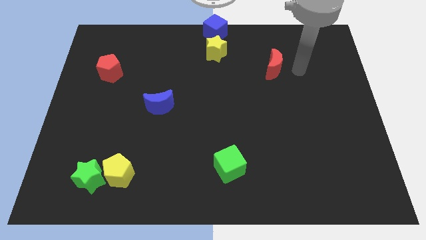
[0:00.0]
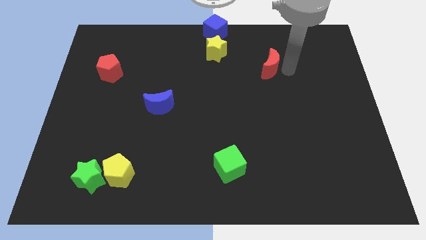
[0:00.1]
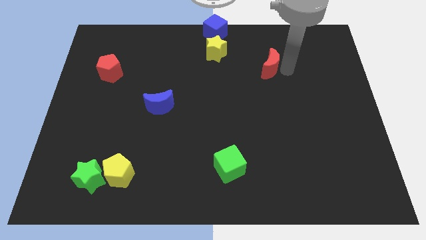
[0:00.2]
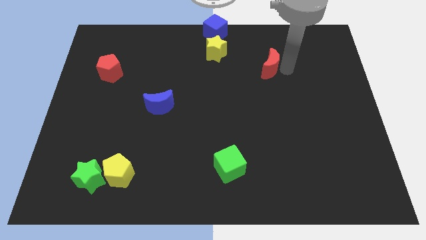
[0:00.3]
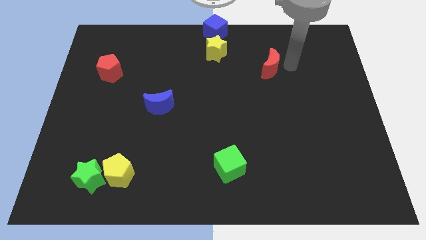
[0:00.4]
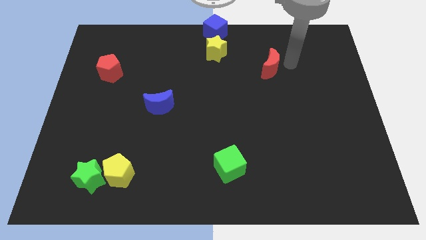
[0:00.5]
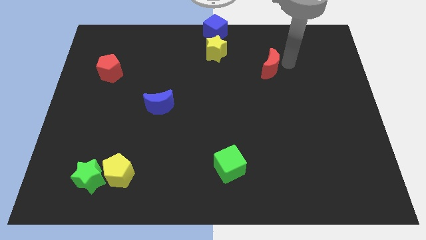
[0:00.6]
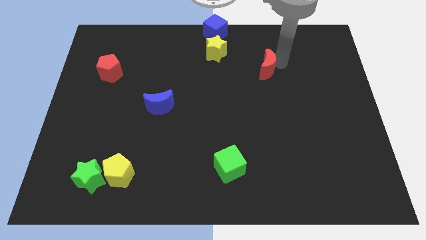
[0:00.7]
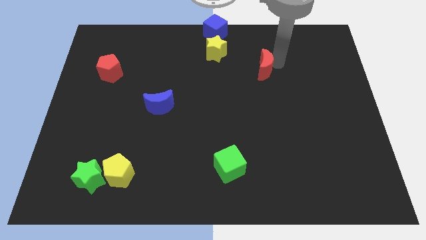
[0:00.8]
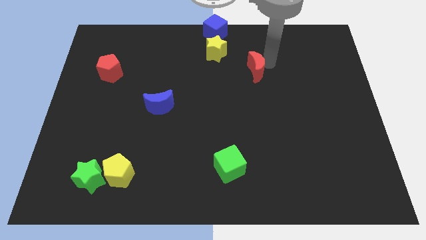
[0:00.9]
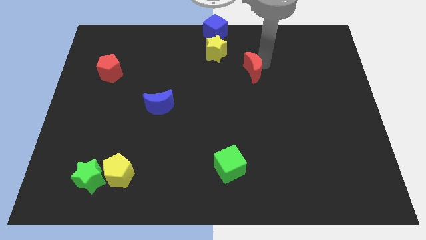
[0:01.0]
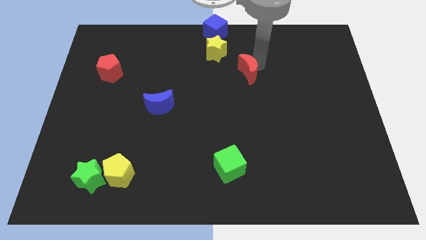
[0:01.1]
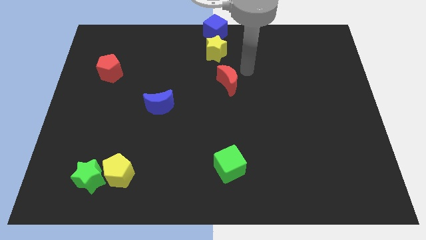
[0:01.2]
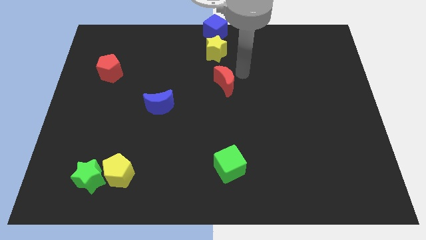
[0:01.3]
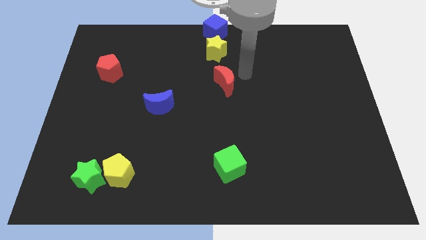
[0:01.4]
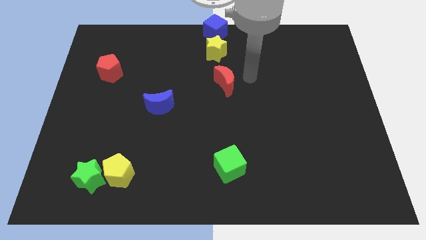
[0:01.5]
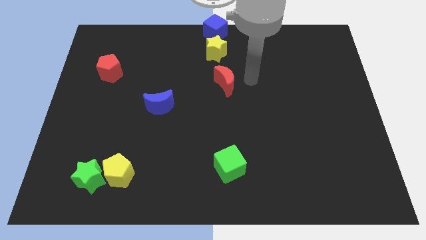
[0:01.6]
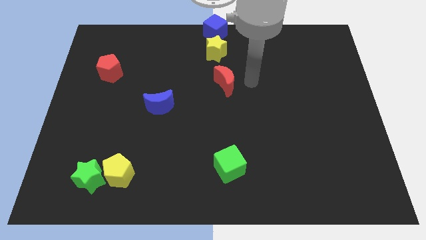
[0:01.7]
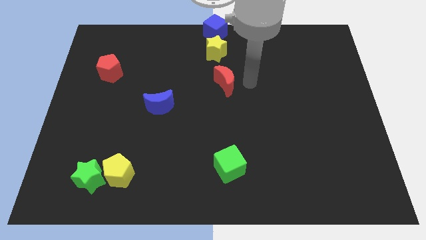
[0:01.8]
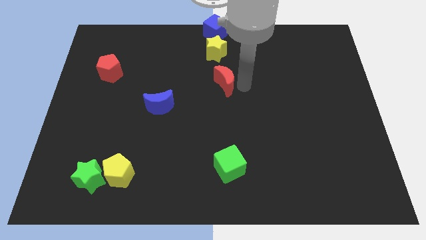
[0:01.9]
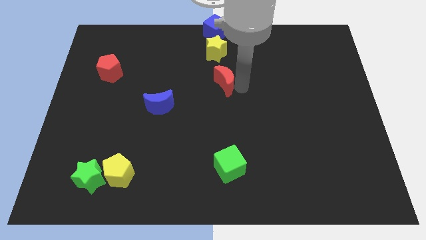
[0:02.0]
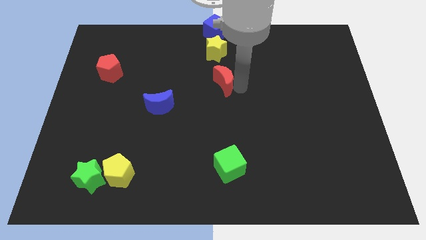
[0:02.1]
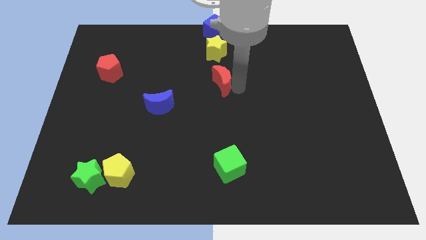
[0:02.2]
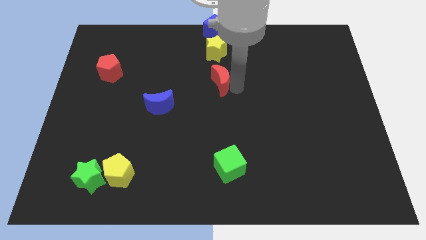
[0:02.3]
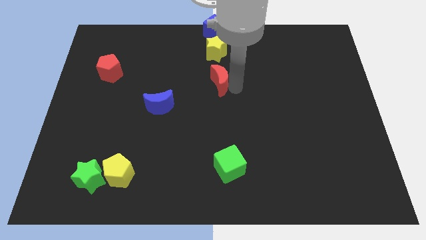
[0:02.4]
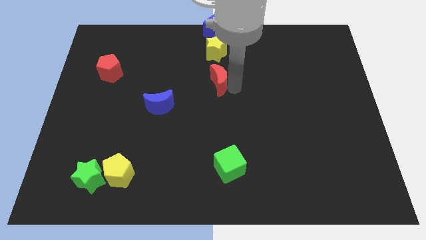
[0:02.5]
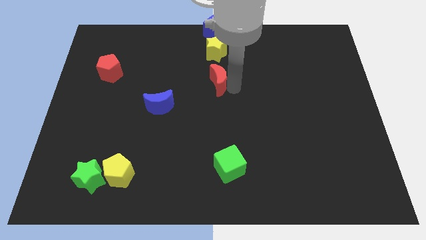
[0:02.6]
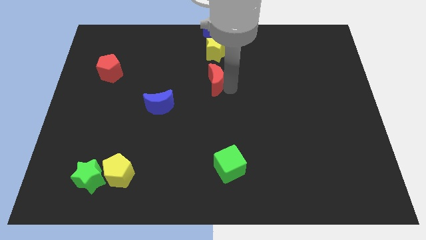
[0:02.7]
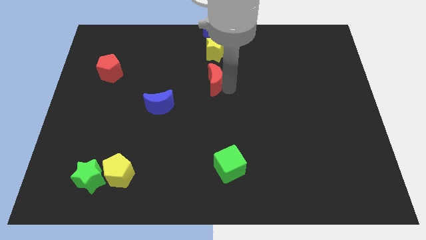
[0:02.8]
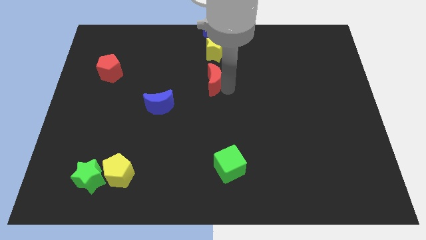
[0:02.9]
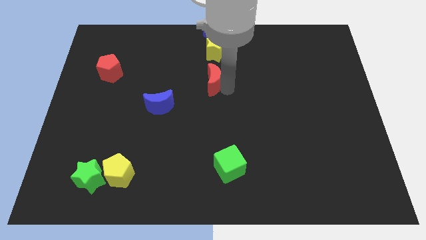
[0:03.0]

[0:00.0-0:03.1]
move the red crescent to the bottom of the yellow star

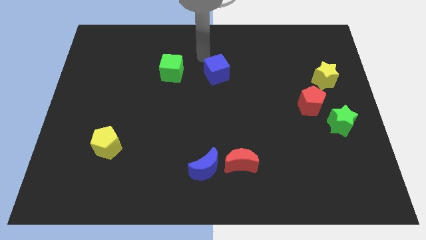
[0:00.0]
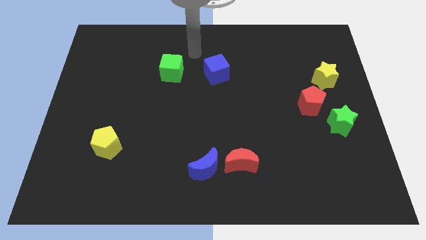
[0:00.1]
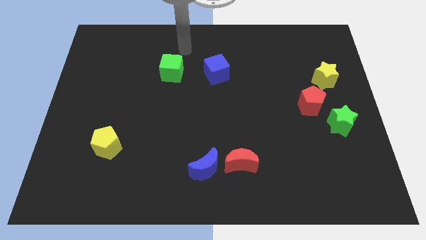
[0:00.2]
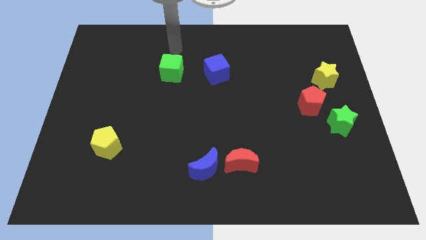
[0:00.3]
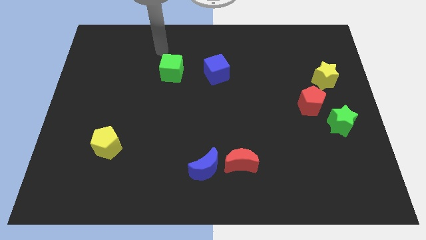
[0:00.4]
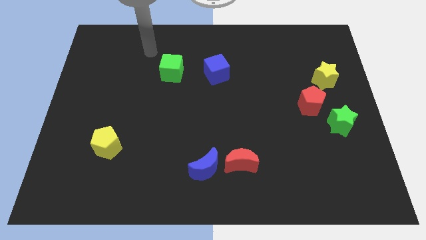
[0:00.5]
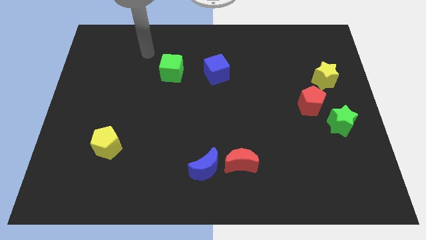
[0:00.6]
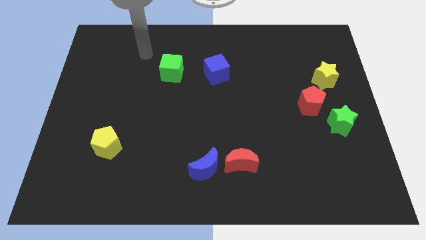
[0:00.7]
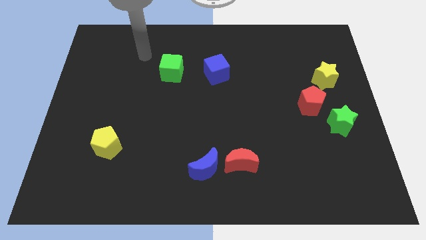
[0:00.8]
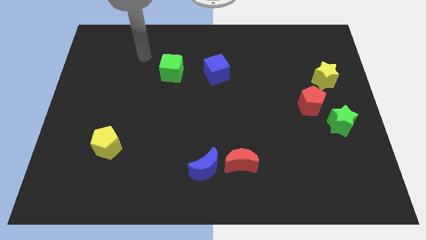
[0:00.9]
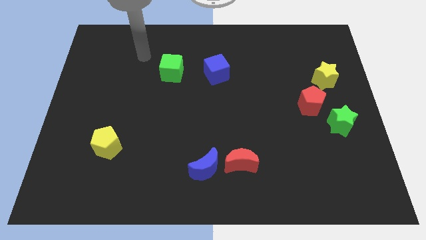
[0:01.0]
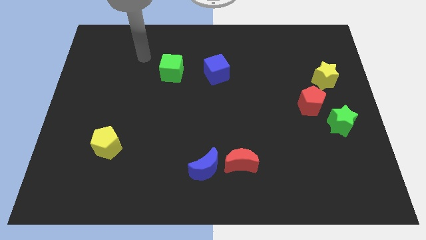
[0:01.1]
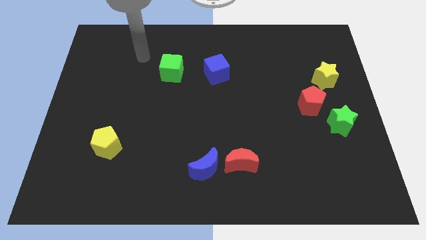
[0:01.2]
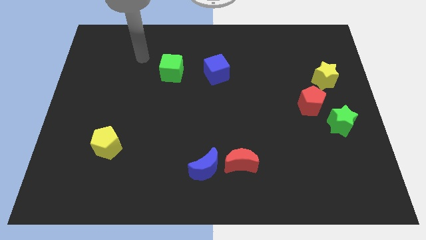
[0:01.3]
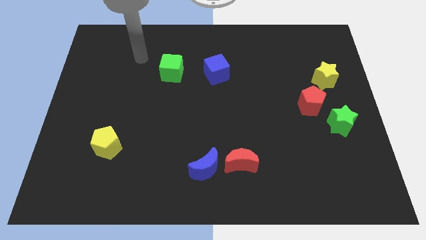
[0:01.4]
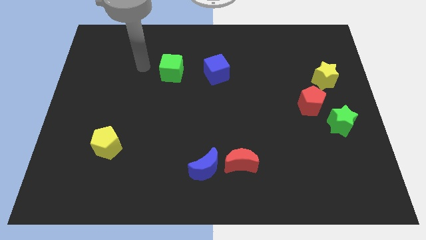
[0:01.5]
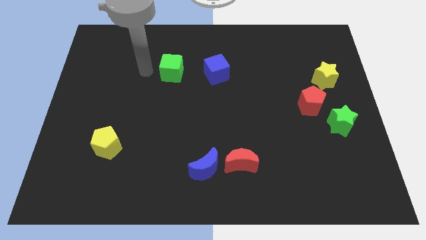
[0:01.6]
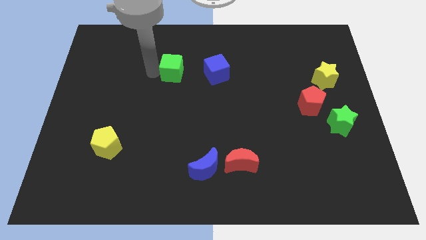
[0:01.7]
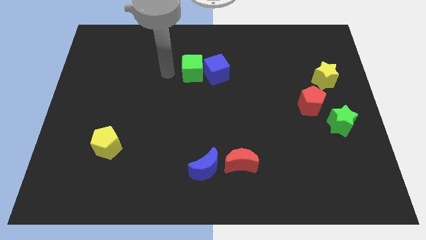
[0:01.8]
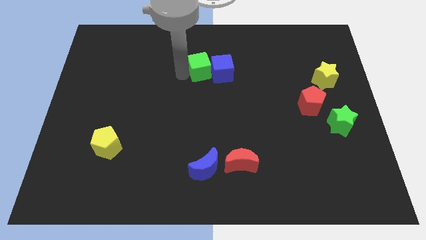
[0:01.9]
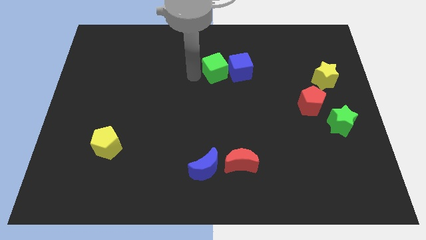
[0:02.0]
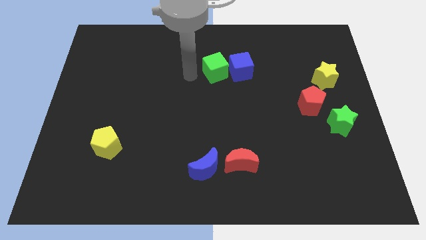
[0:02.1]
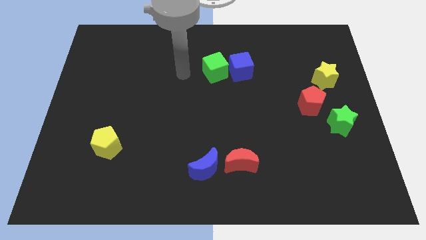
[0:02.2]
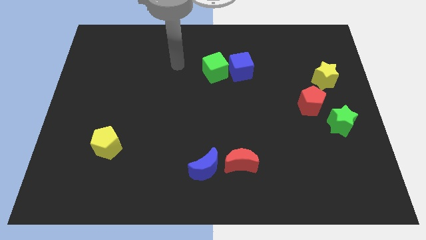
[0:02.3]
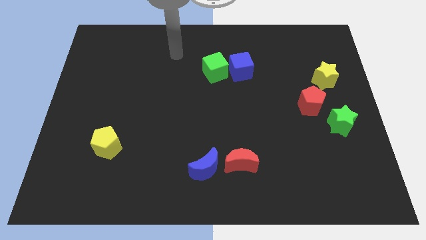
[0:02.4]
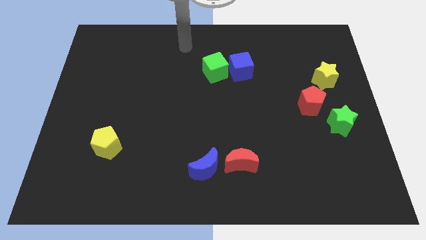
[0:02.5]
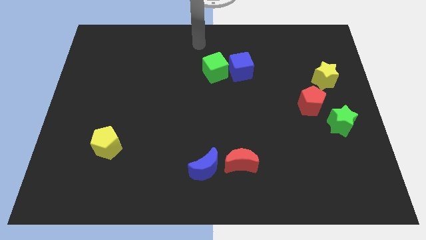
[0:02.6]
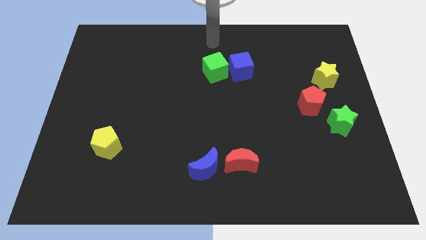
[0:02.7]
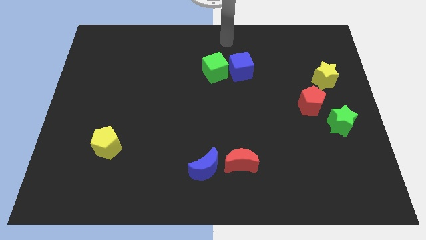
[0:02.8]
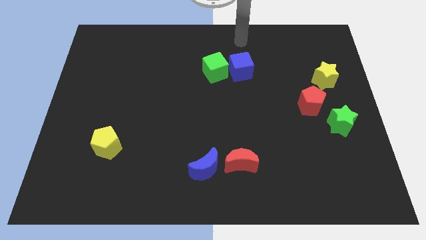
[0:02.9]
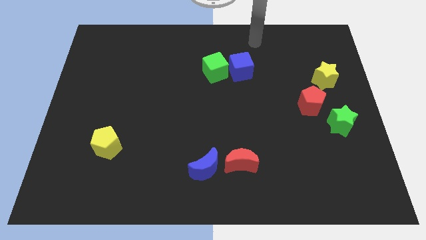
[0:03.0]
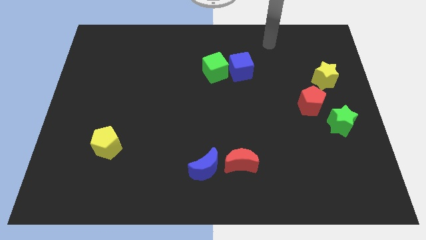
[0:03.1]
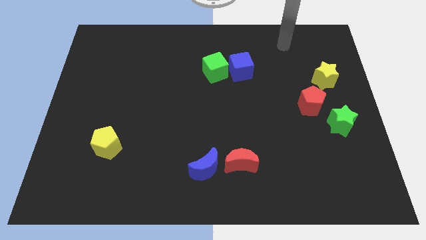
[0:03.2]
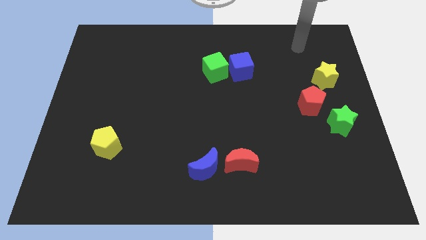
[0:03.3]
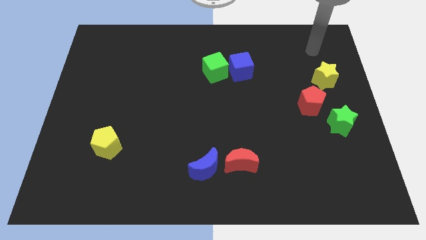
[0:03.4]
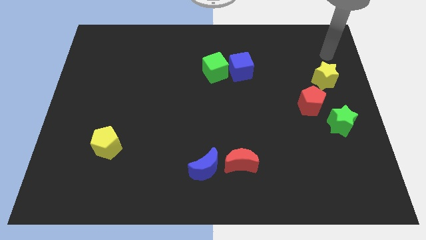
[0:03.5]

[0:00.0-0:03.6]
push the green cube into the blue cube

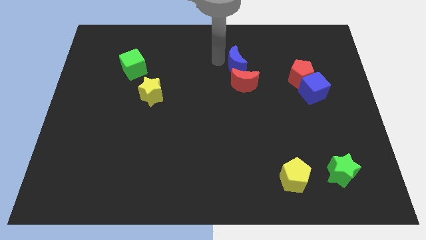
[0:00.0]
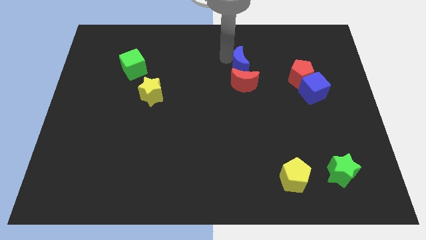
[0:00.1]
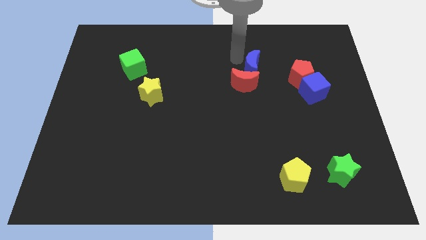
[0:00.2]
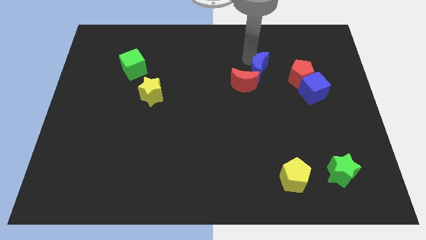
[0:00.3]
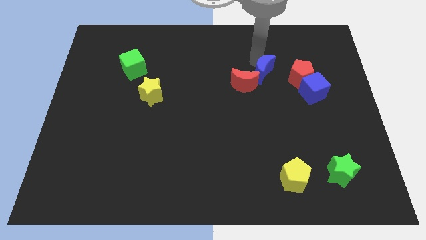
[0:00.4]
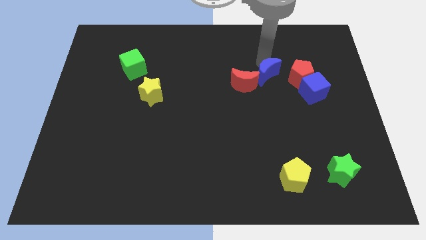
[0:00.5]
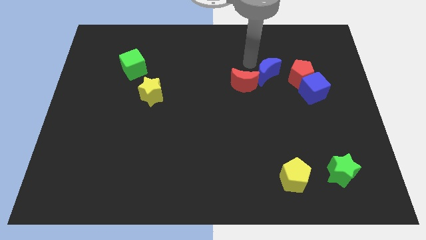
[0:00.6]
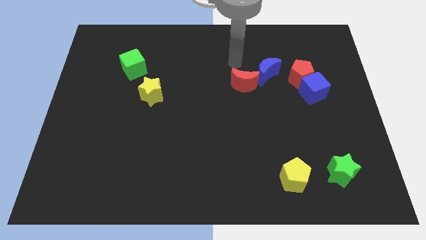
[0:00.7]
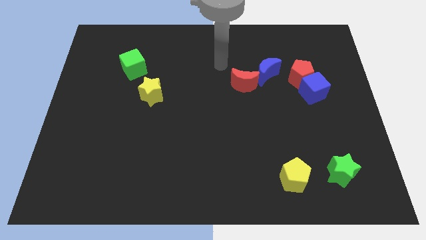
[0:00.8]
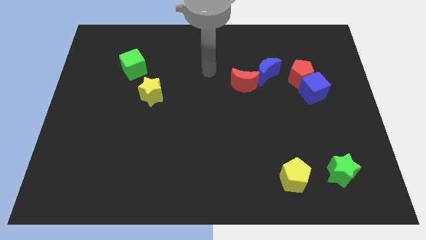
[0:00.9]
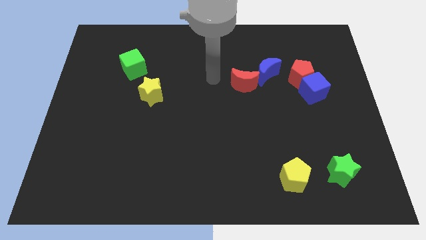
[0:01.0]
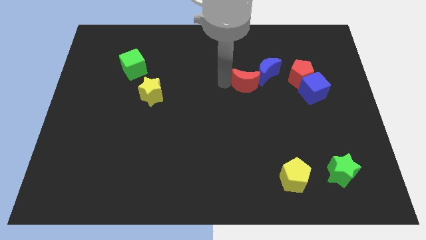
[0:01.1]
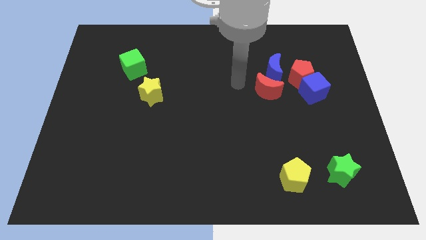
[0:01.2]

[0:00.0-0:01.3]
move the blue moon between the red blocks

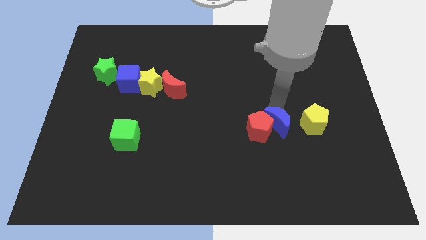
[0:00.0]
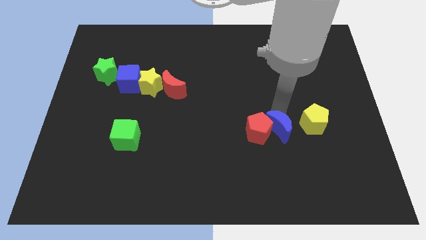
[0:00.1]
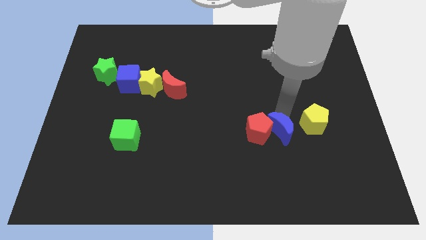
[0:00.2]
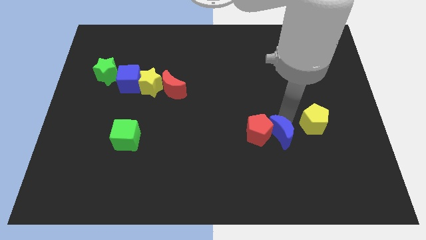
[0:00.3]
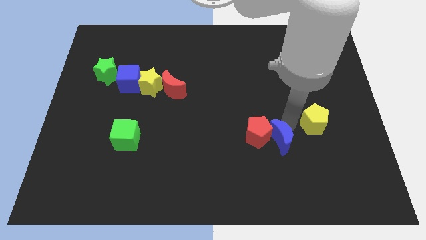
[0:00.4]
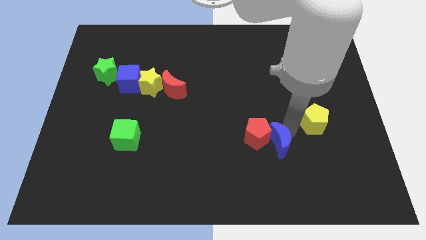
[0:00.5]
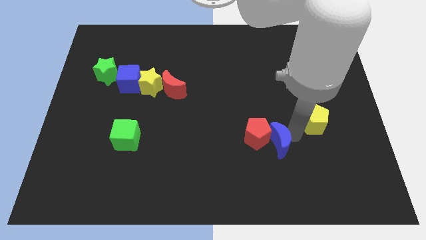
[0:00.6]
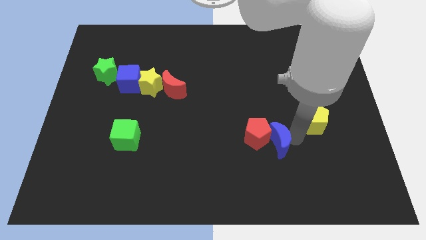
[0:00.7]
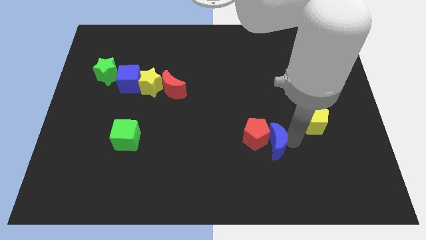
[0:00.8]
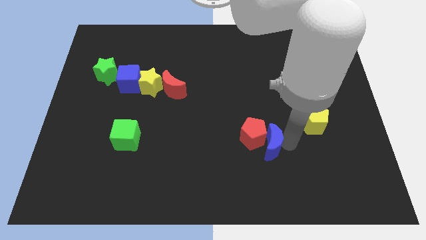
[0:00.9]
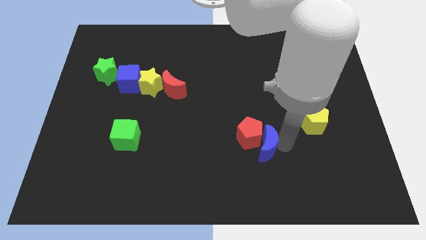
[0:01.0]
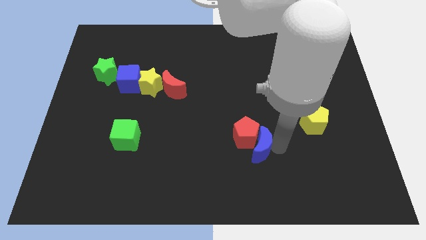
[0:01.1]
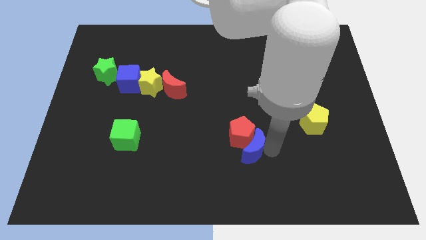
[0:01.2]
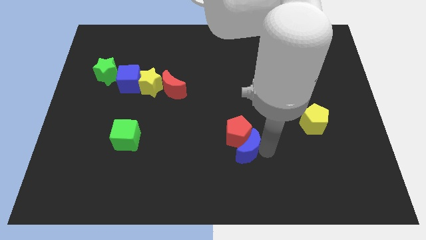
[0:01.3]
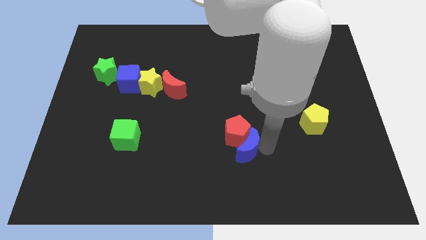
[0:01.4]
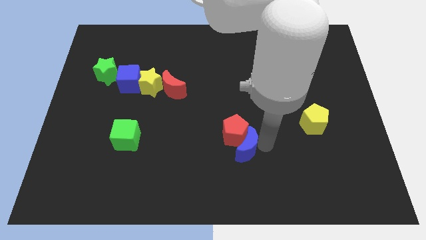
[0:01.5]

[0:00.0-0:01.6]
move the blue crescent along red pentagon
